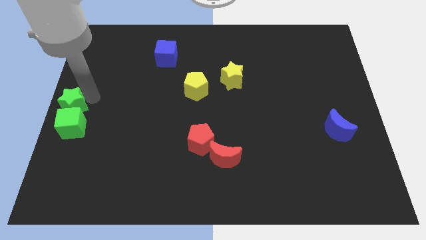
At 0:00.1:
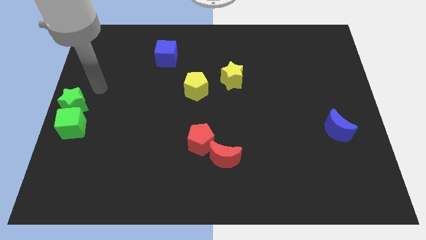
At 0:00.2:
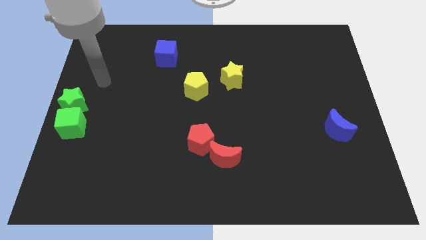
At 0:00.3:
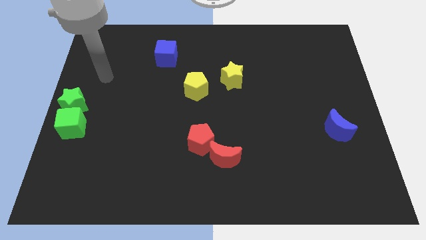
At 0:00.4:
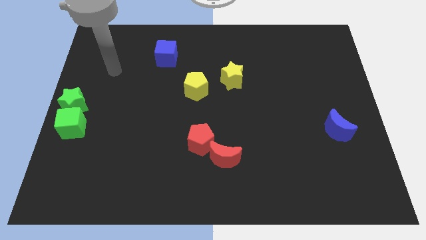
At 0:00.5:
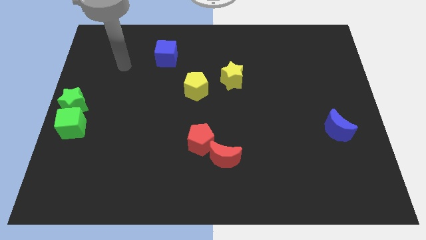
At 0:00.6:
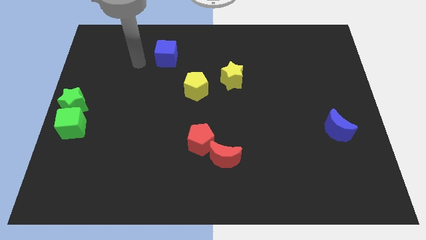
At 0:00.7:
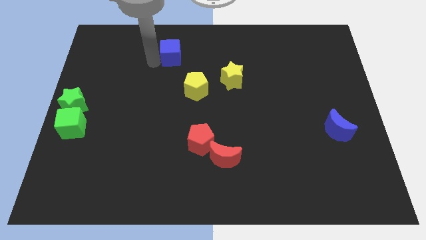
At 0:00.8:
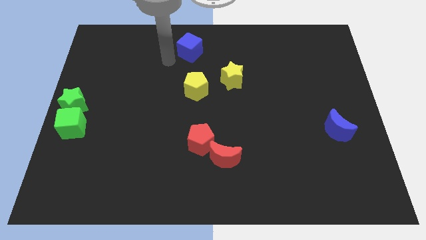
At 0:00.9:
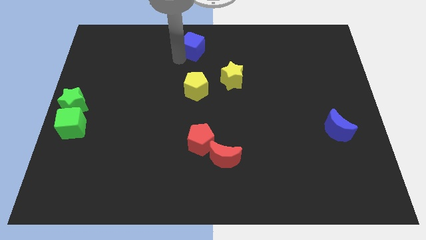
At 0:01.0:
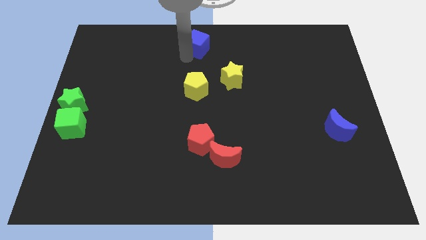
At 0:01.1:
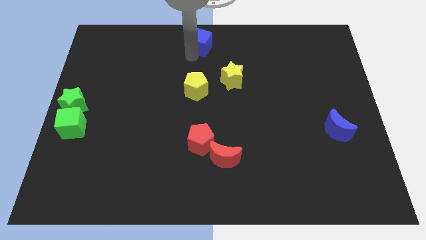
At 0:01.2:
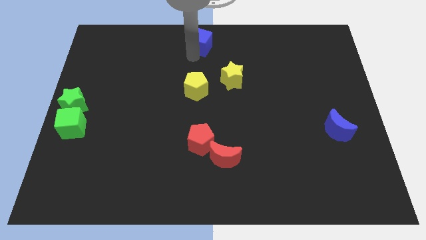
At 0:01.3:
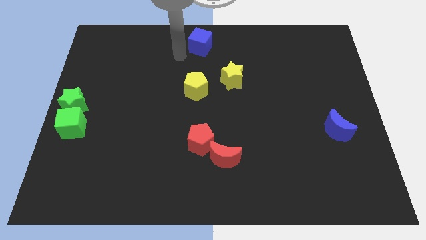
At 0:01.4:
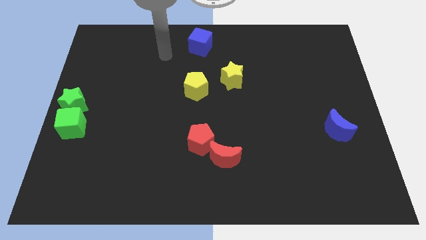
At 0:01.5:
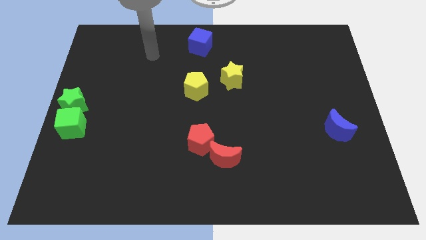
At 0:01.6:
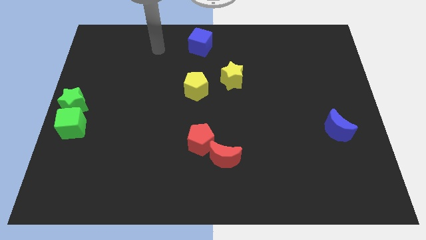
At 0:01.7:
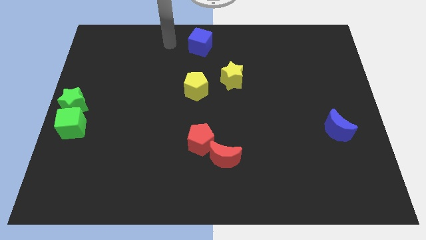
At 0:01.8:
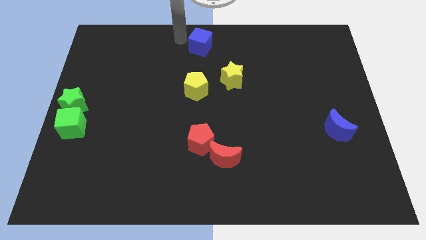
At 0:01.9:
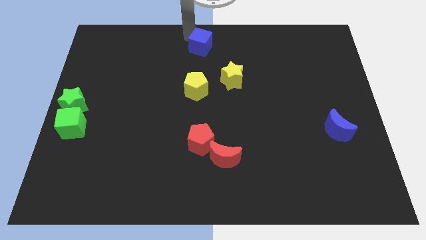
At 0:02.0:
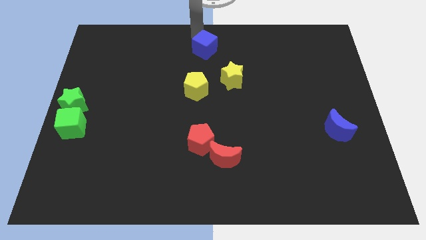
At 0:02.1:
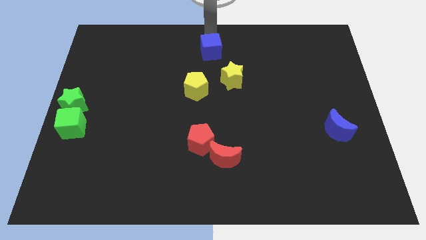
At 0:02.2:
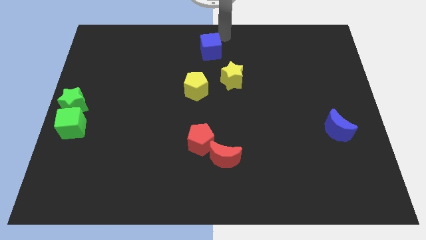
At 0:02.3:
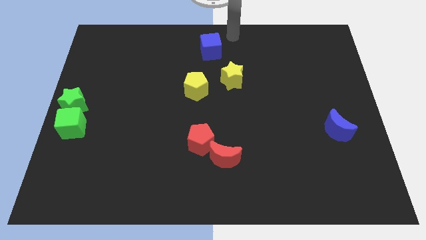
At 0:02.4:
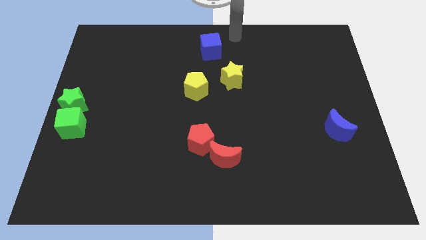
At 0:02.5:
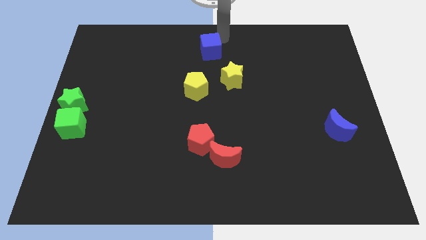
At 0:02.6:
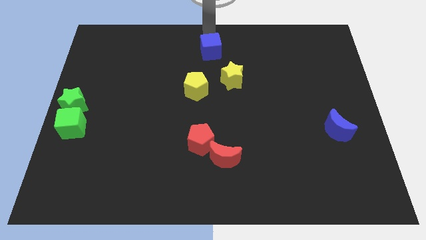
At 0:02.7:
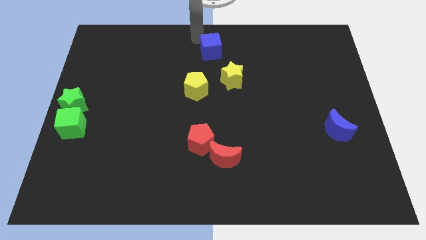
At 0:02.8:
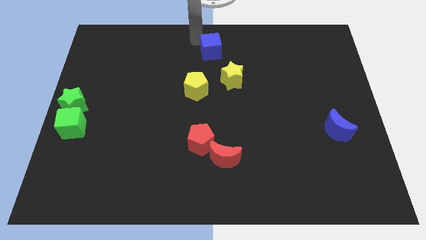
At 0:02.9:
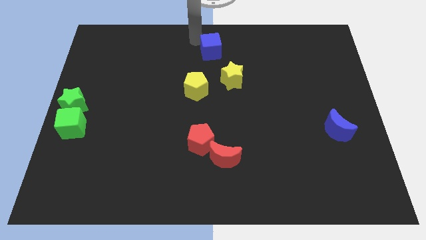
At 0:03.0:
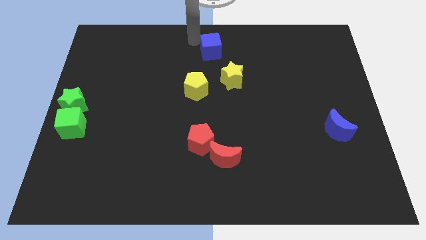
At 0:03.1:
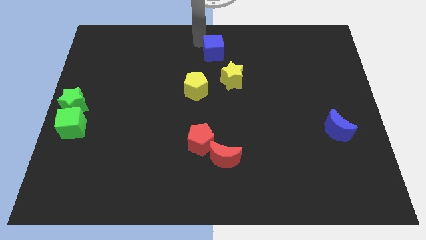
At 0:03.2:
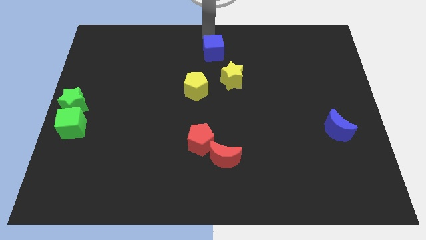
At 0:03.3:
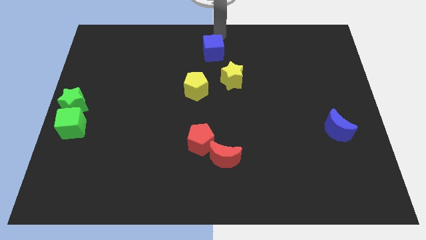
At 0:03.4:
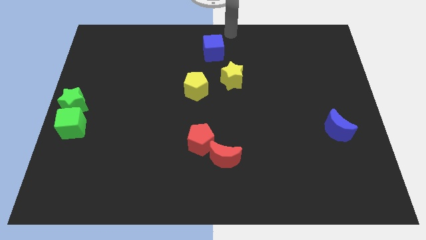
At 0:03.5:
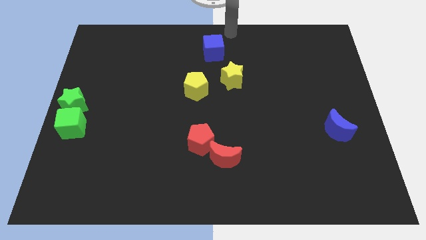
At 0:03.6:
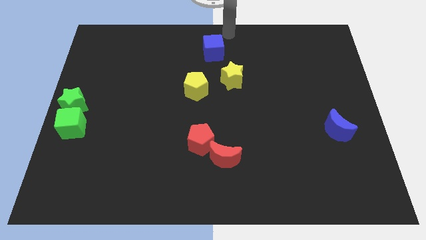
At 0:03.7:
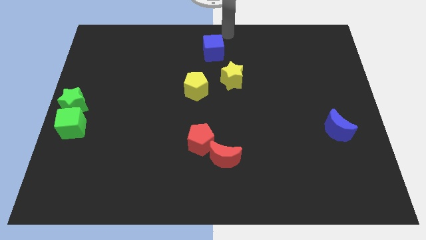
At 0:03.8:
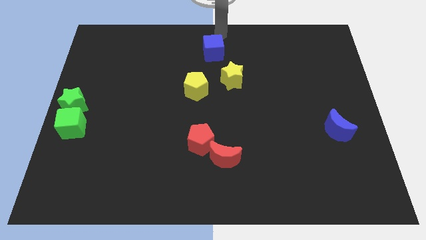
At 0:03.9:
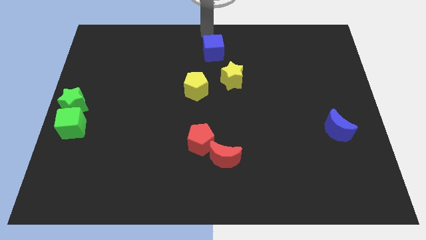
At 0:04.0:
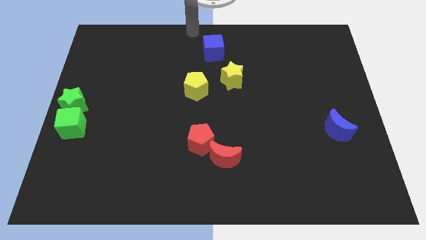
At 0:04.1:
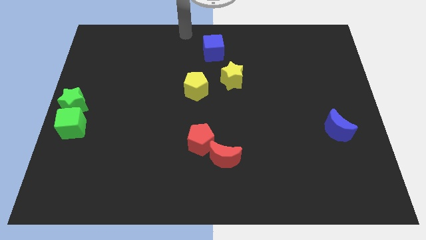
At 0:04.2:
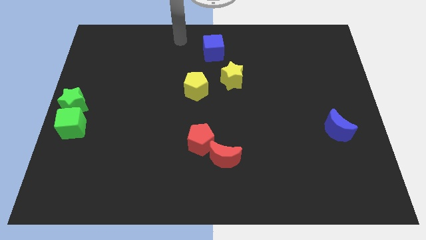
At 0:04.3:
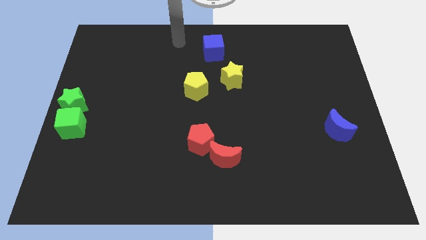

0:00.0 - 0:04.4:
move the blue cube to the top of the yellow star

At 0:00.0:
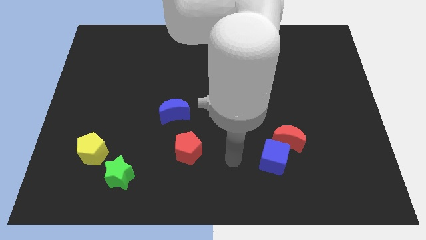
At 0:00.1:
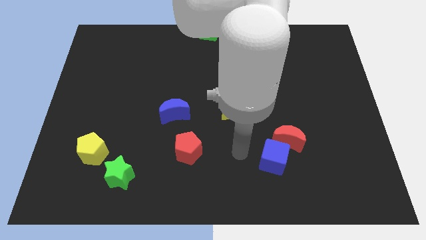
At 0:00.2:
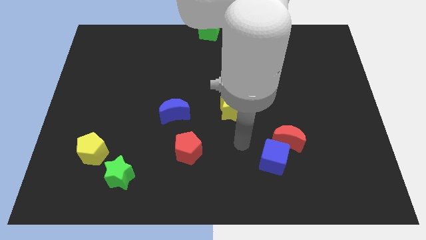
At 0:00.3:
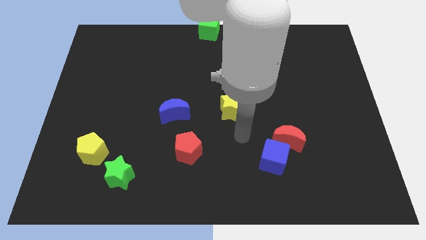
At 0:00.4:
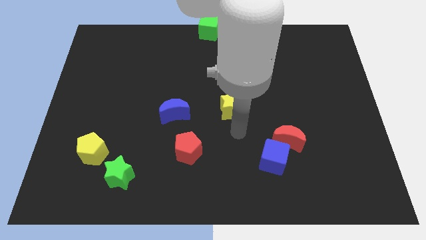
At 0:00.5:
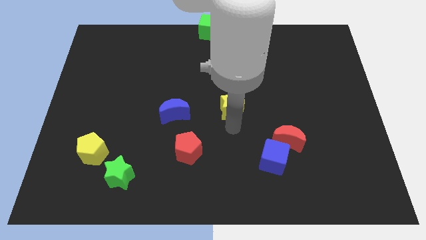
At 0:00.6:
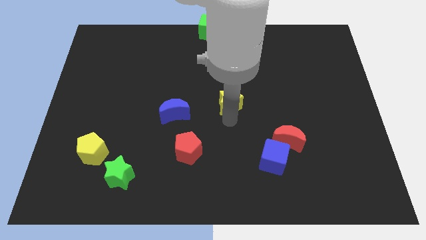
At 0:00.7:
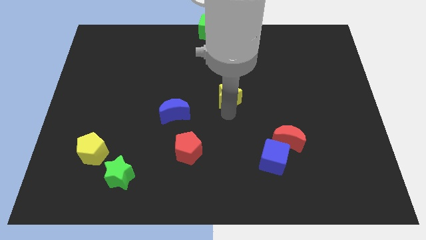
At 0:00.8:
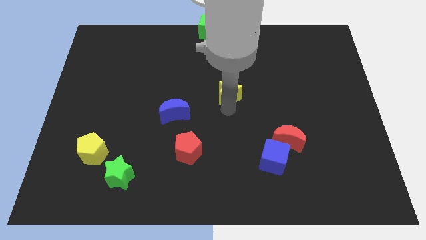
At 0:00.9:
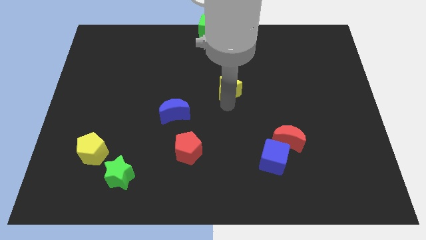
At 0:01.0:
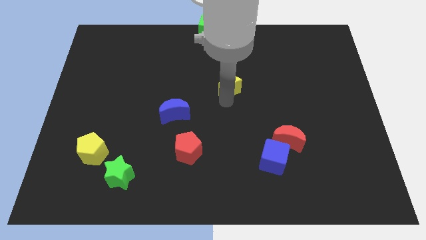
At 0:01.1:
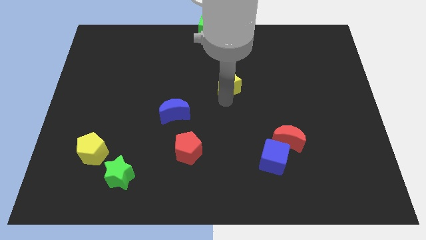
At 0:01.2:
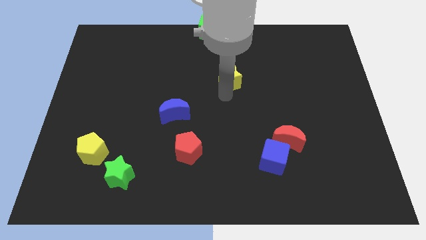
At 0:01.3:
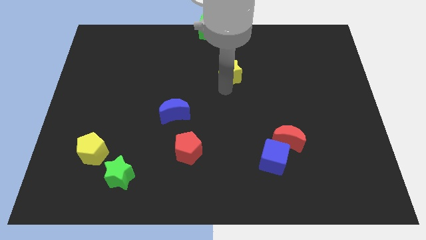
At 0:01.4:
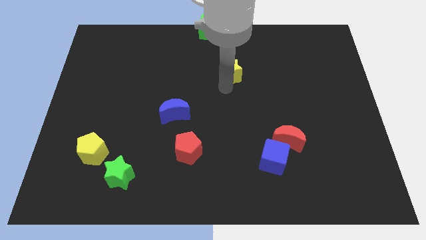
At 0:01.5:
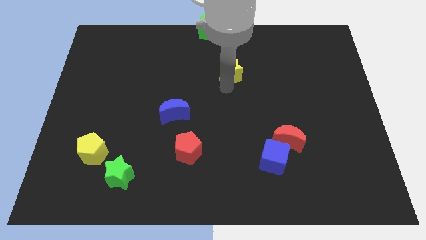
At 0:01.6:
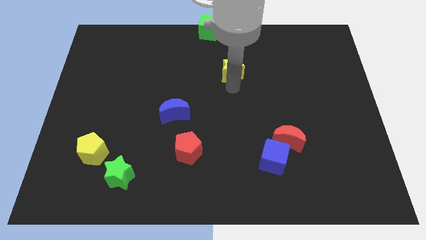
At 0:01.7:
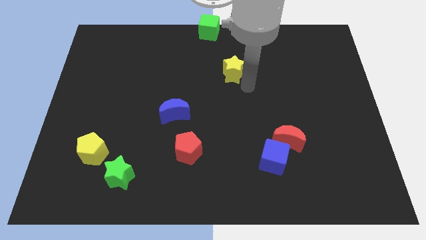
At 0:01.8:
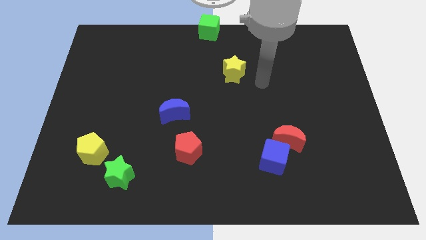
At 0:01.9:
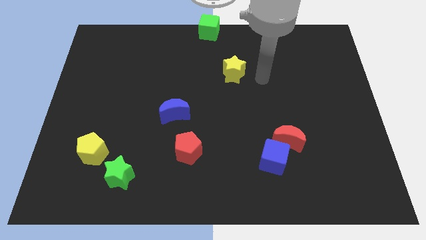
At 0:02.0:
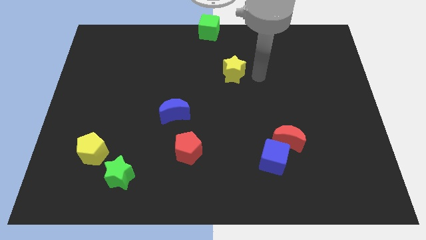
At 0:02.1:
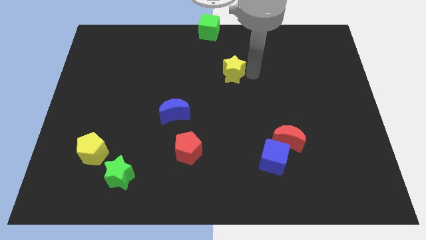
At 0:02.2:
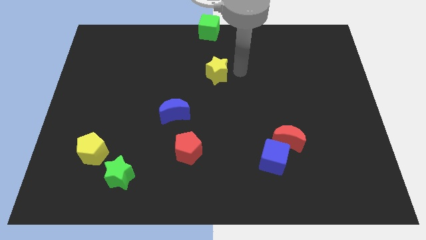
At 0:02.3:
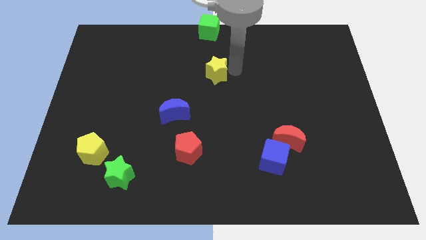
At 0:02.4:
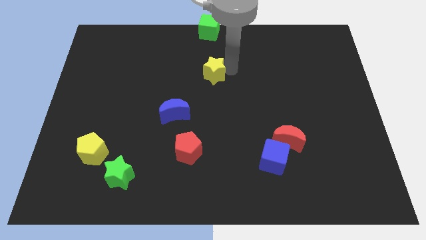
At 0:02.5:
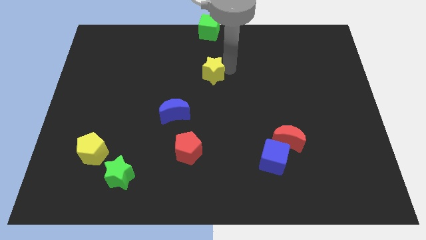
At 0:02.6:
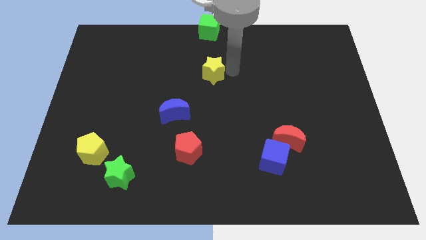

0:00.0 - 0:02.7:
push the yellow star towards the top center of the board

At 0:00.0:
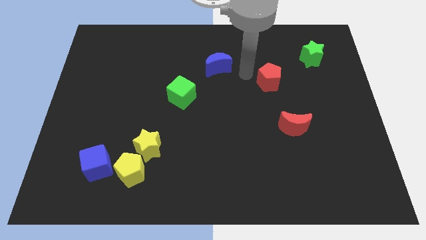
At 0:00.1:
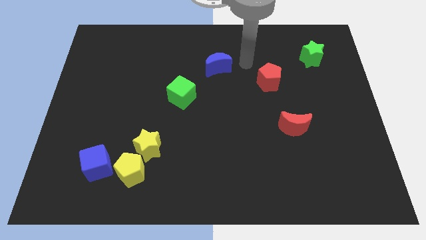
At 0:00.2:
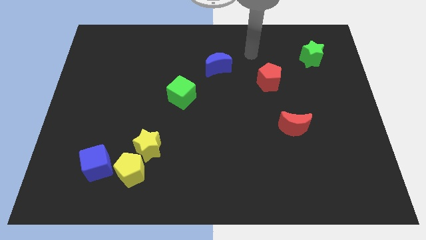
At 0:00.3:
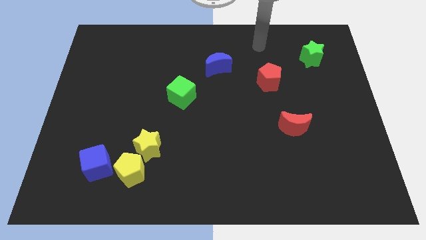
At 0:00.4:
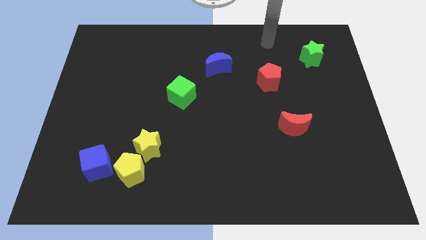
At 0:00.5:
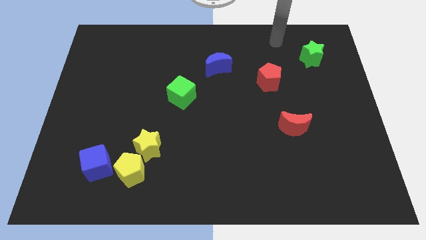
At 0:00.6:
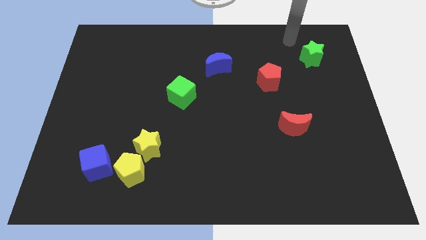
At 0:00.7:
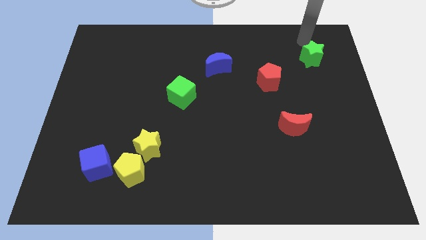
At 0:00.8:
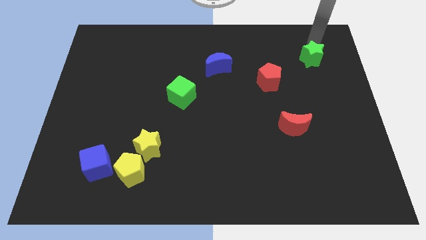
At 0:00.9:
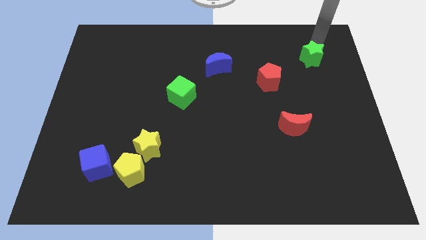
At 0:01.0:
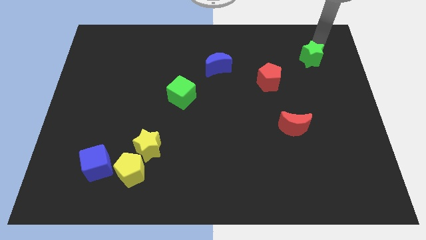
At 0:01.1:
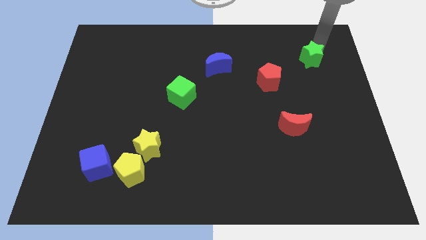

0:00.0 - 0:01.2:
place the arm above the green star

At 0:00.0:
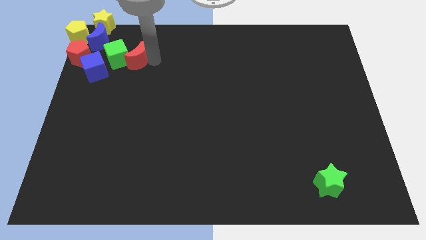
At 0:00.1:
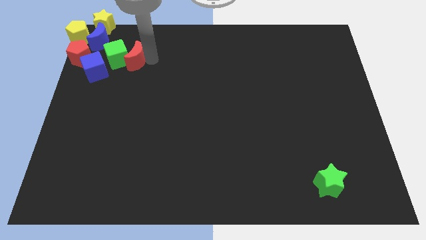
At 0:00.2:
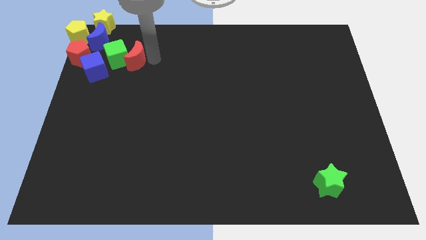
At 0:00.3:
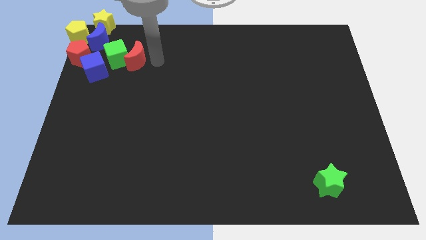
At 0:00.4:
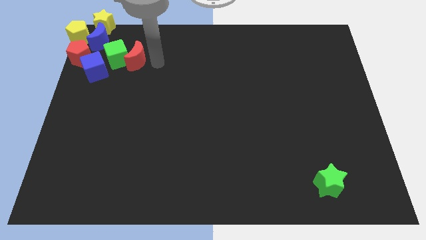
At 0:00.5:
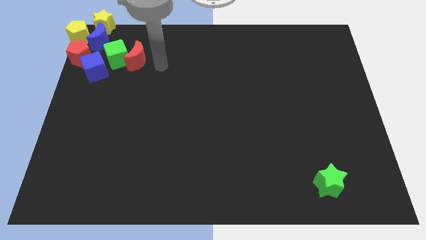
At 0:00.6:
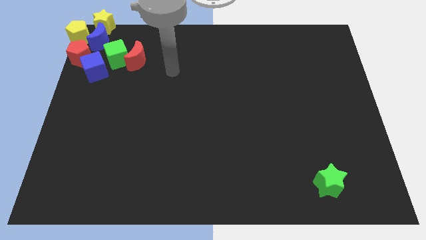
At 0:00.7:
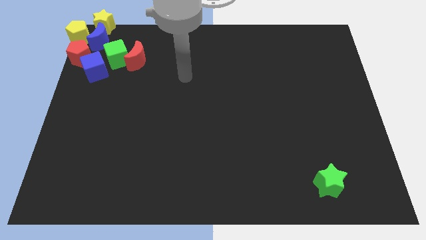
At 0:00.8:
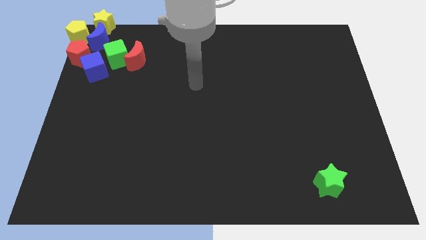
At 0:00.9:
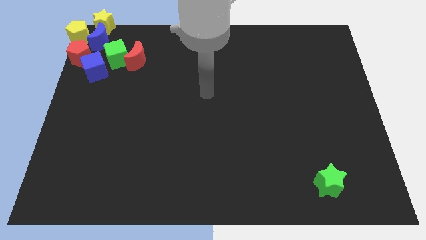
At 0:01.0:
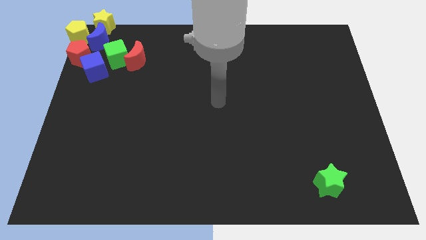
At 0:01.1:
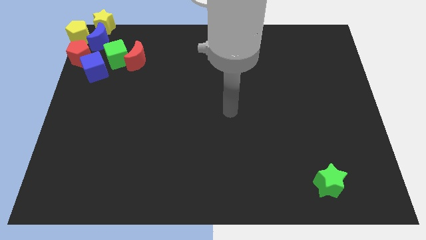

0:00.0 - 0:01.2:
move your arm towards the center
